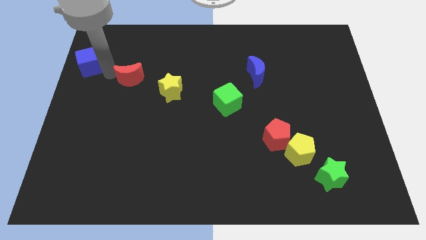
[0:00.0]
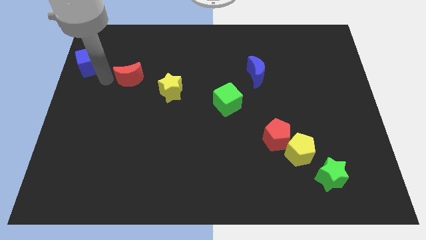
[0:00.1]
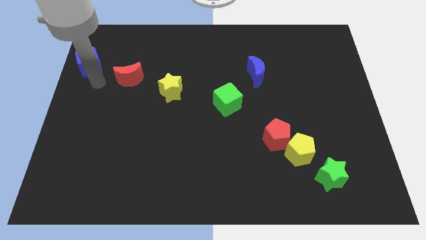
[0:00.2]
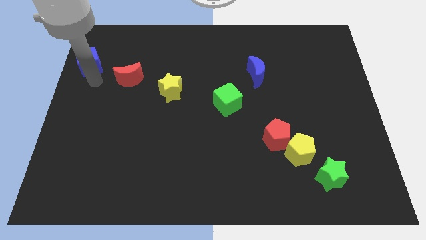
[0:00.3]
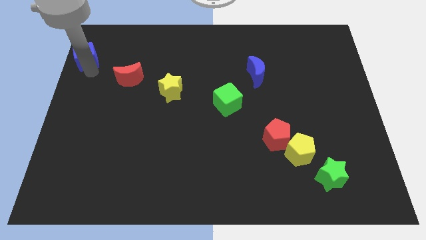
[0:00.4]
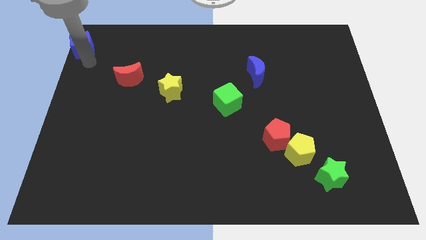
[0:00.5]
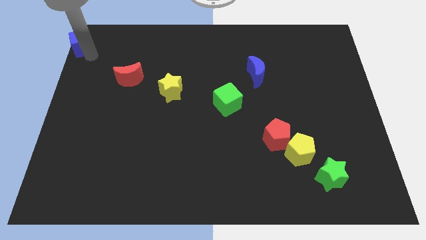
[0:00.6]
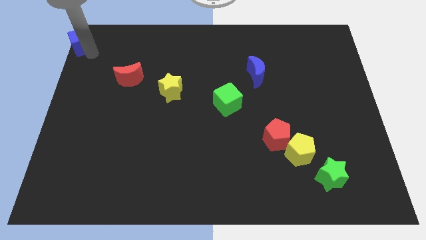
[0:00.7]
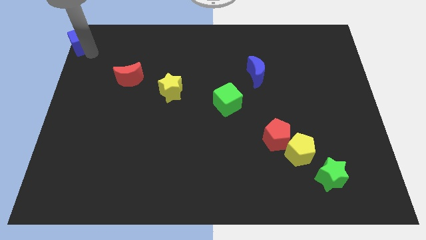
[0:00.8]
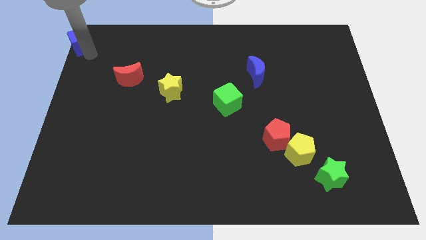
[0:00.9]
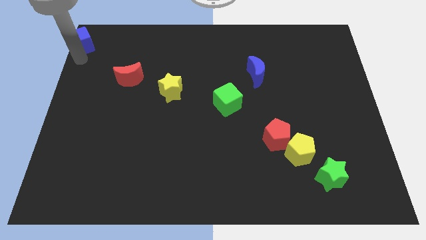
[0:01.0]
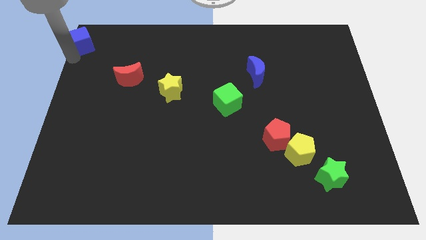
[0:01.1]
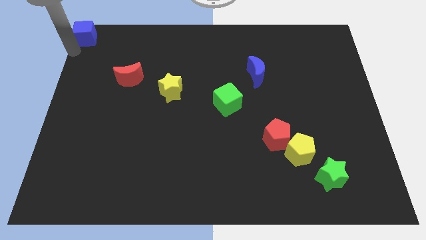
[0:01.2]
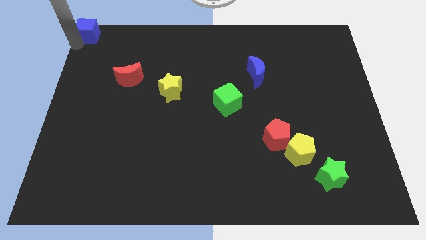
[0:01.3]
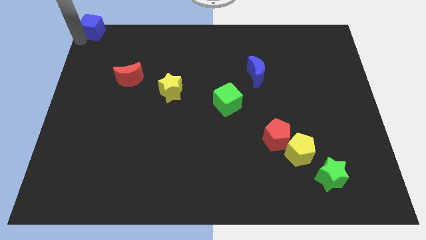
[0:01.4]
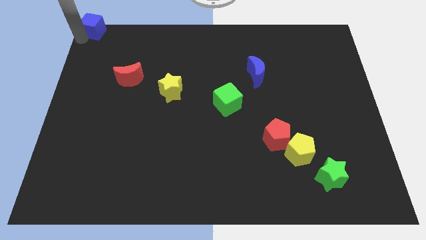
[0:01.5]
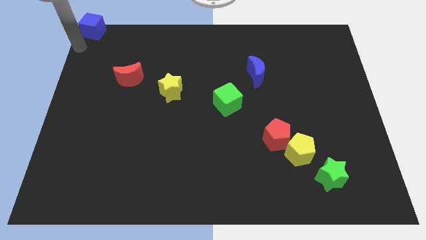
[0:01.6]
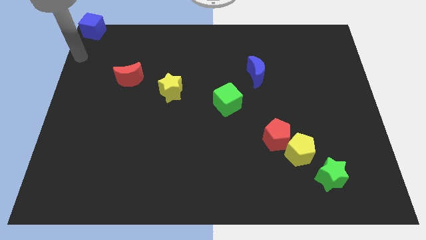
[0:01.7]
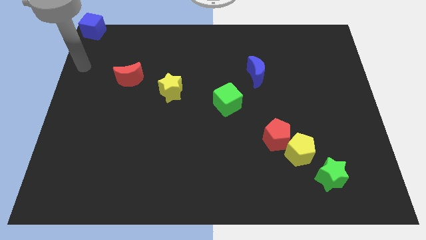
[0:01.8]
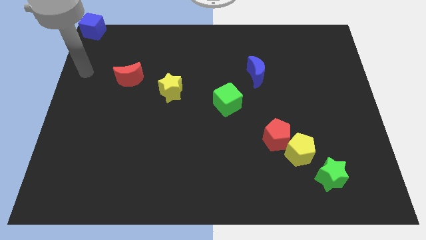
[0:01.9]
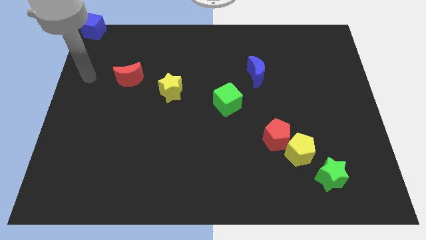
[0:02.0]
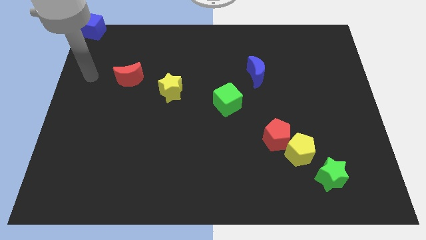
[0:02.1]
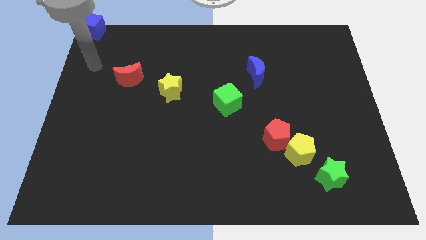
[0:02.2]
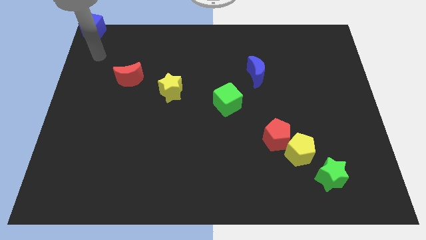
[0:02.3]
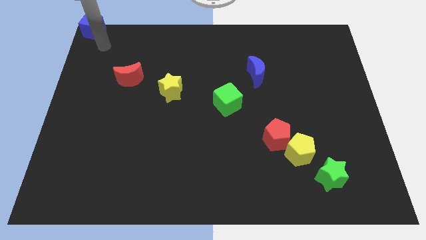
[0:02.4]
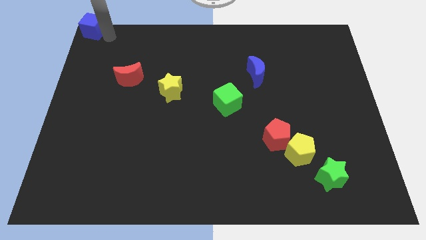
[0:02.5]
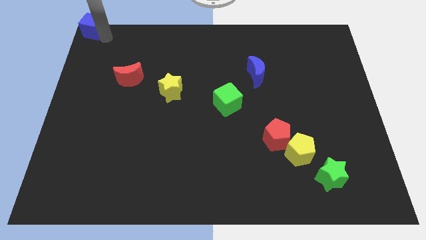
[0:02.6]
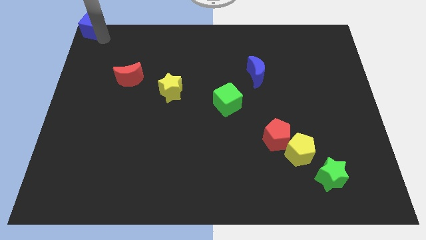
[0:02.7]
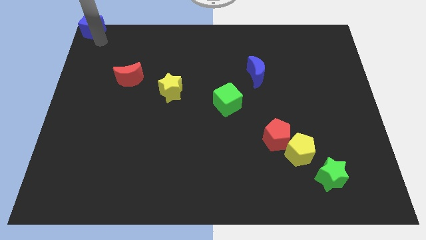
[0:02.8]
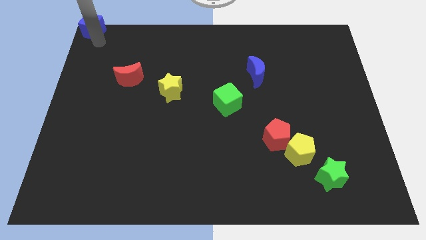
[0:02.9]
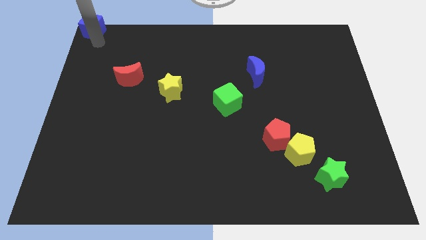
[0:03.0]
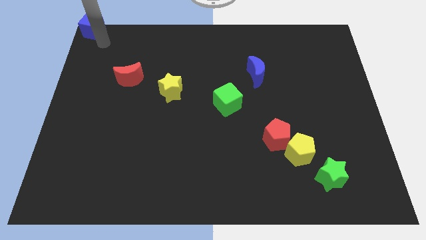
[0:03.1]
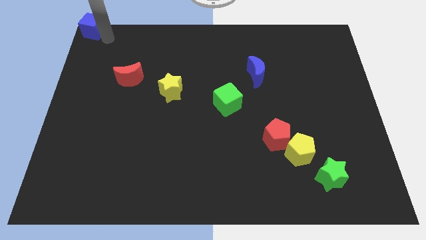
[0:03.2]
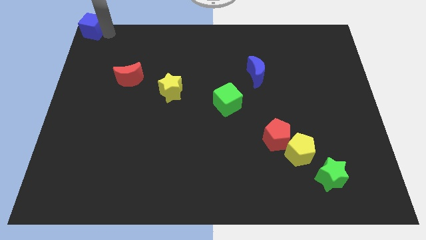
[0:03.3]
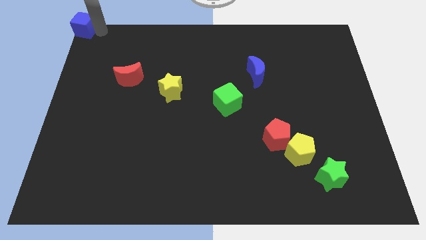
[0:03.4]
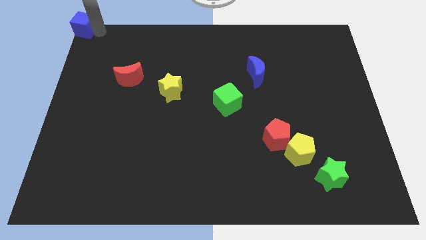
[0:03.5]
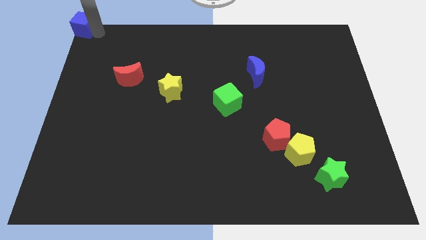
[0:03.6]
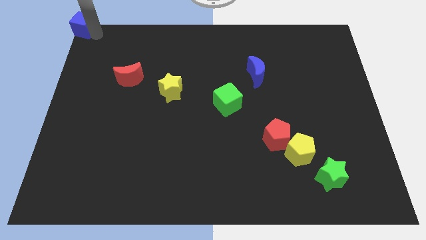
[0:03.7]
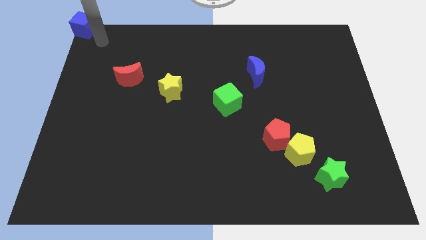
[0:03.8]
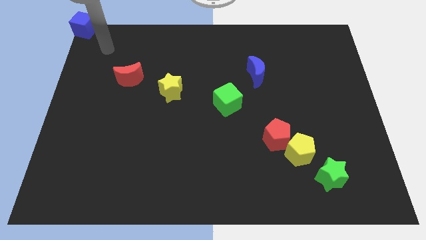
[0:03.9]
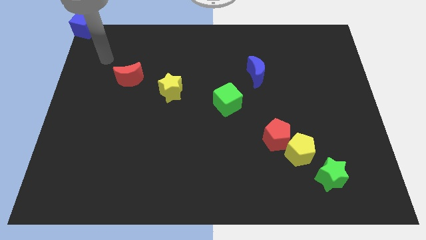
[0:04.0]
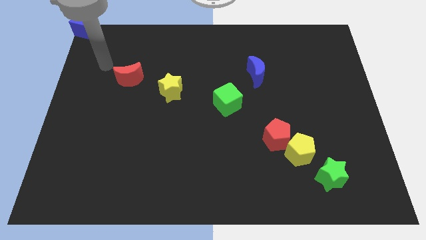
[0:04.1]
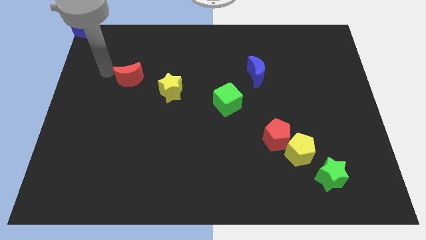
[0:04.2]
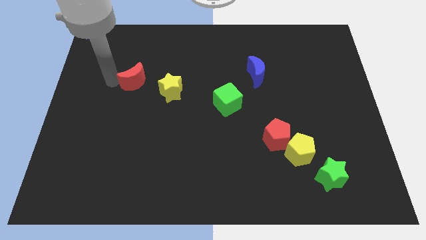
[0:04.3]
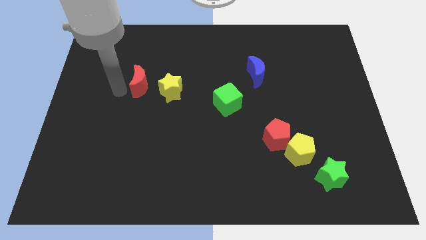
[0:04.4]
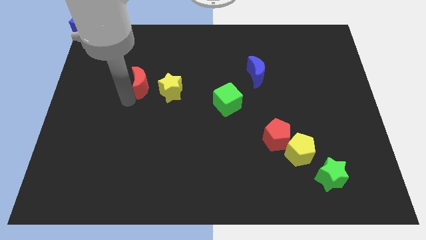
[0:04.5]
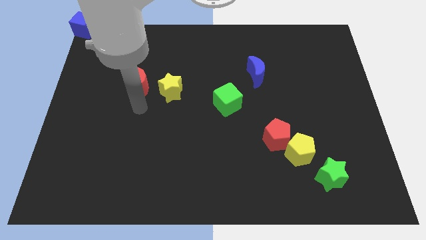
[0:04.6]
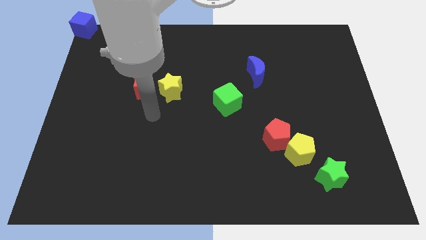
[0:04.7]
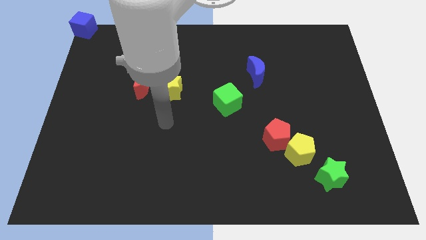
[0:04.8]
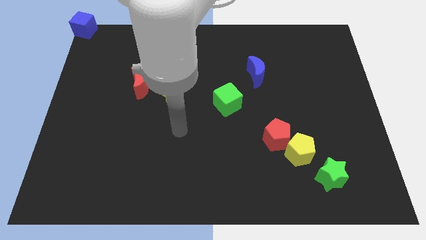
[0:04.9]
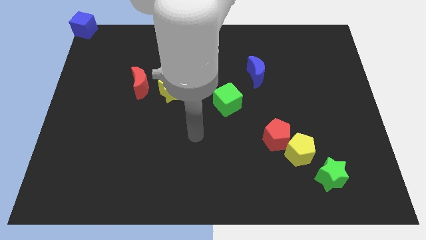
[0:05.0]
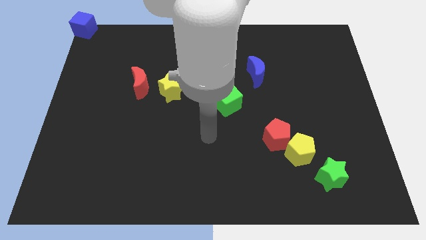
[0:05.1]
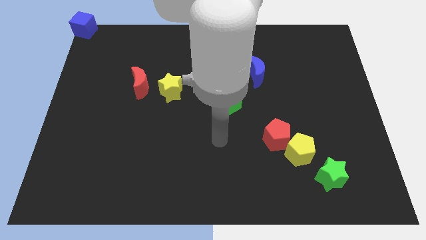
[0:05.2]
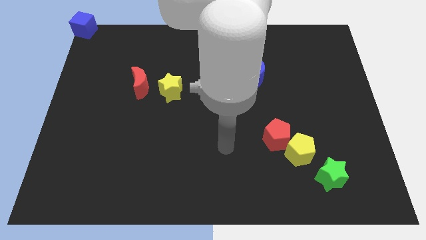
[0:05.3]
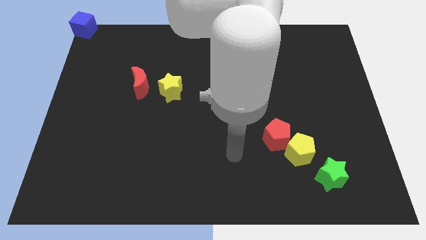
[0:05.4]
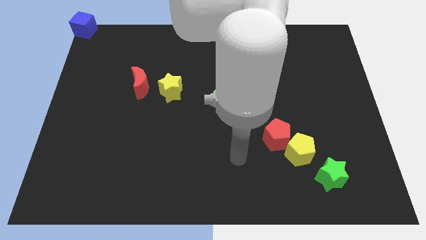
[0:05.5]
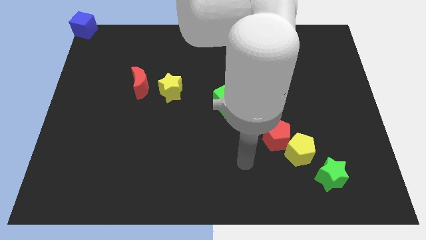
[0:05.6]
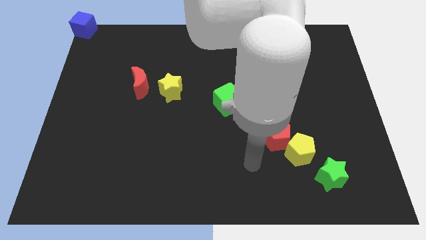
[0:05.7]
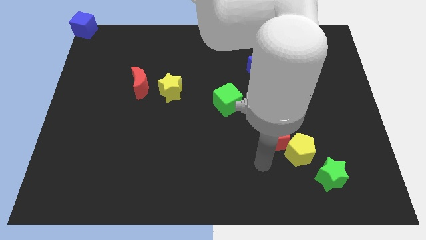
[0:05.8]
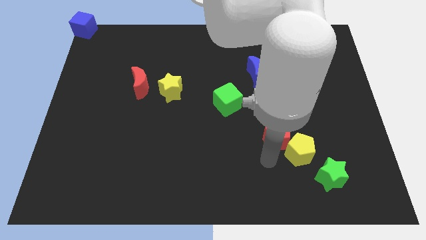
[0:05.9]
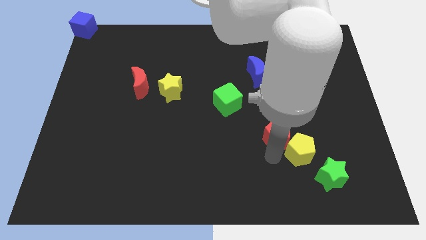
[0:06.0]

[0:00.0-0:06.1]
move blue cube top left

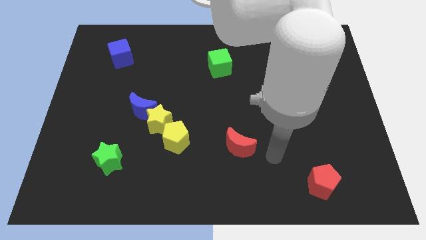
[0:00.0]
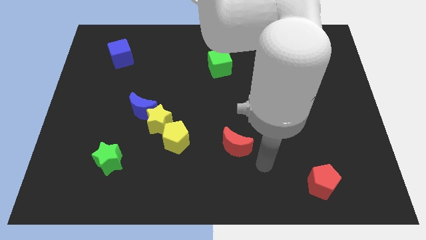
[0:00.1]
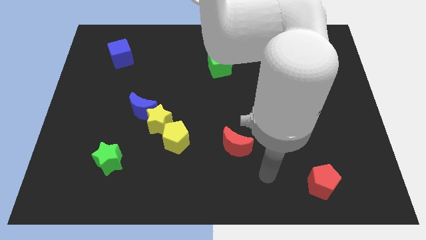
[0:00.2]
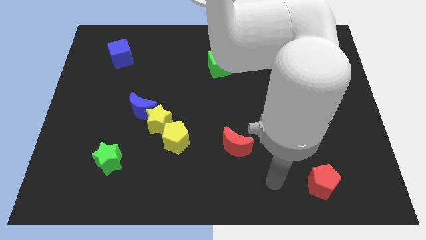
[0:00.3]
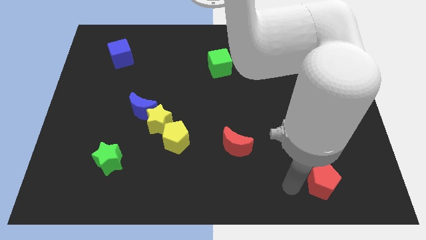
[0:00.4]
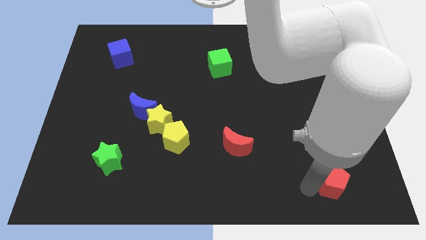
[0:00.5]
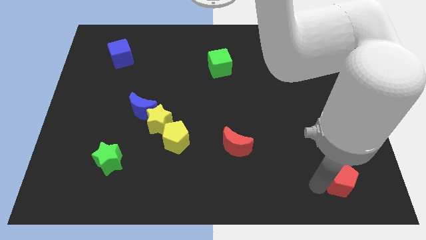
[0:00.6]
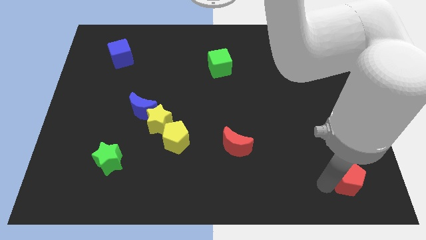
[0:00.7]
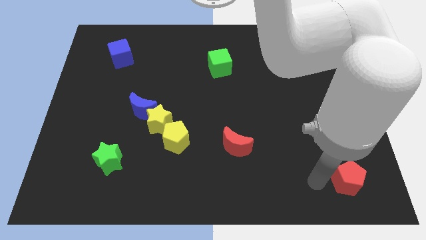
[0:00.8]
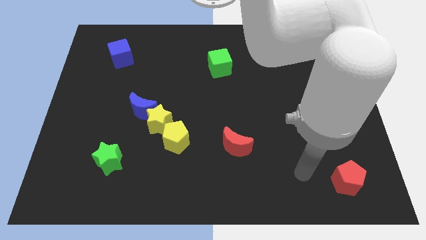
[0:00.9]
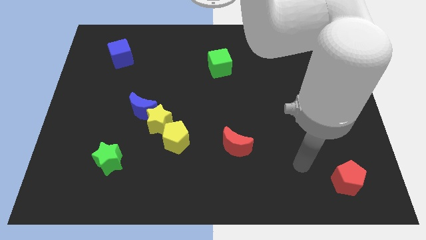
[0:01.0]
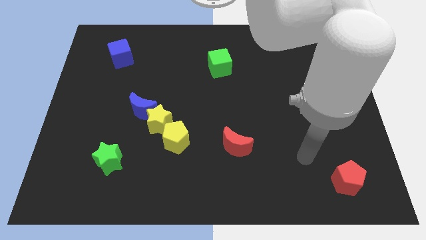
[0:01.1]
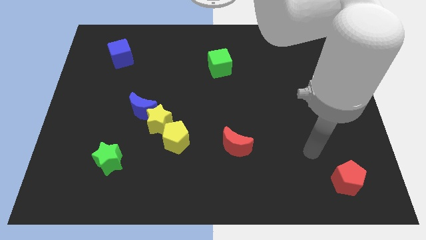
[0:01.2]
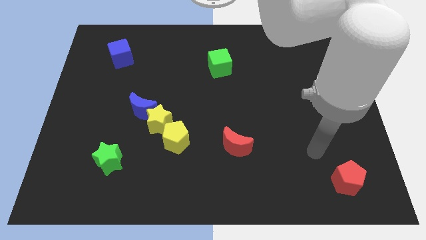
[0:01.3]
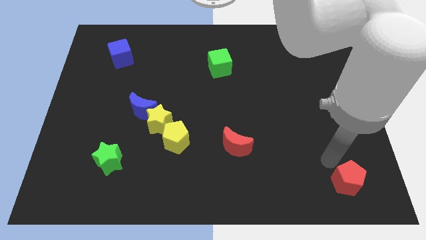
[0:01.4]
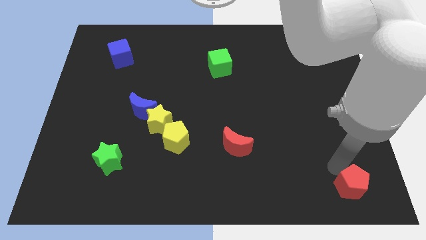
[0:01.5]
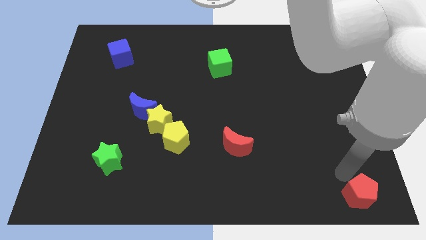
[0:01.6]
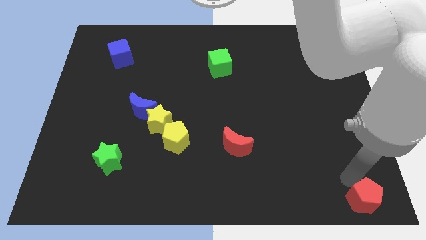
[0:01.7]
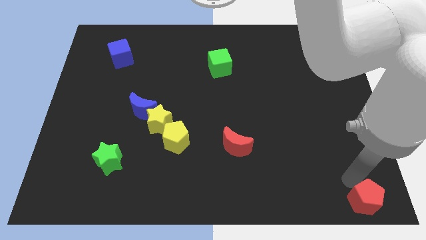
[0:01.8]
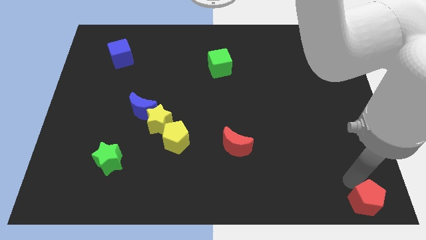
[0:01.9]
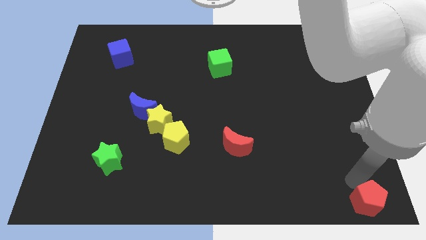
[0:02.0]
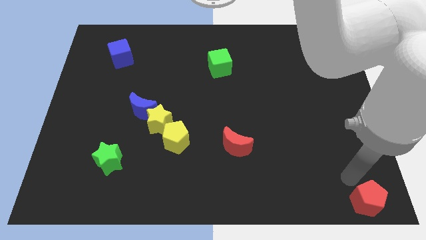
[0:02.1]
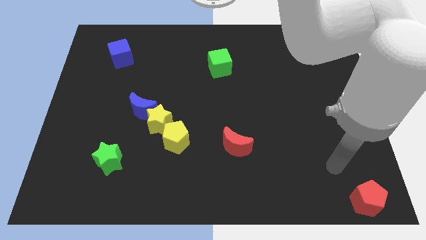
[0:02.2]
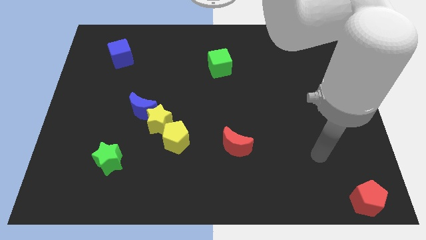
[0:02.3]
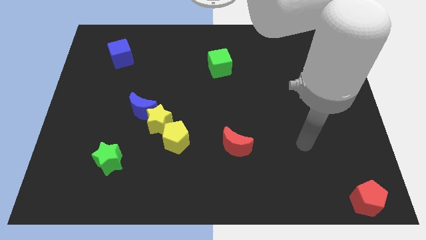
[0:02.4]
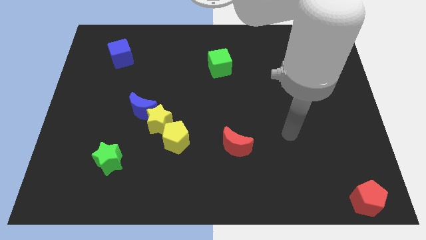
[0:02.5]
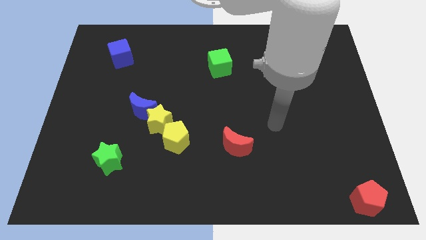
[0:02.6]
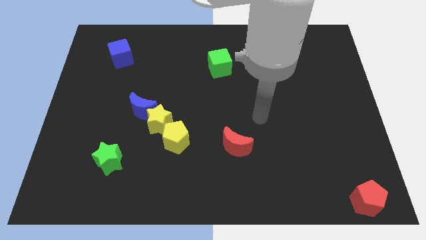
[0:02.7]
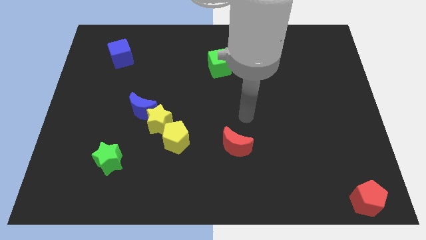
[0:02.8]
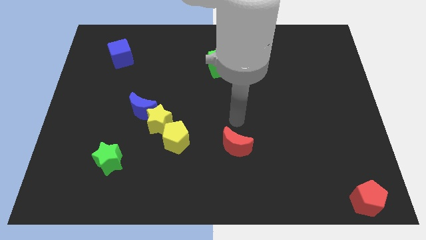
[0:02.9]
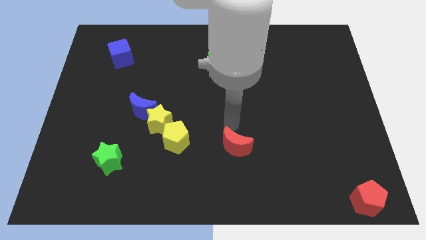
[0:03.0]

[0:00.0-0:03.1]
place the red pentagon near to the bottom right of the board
